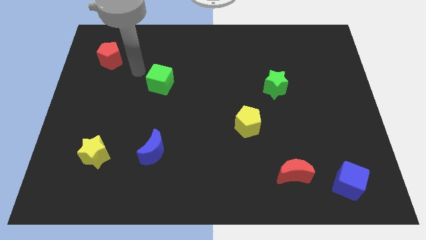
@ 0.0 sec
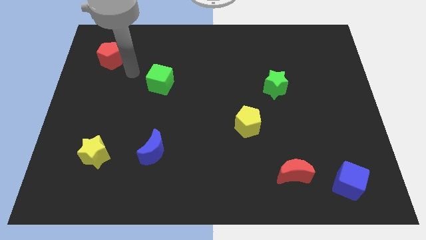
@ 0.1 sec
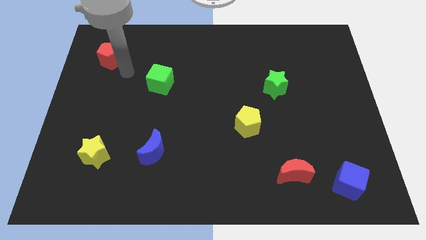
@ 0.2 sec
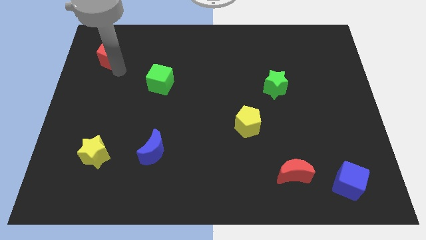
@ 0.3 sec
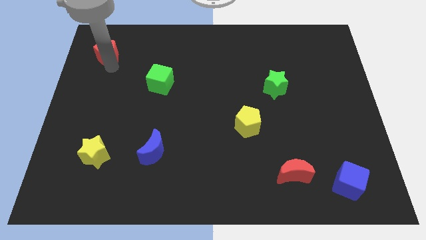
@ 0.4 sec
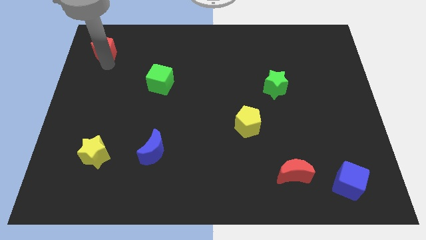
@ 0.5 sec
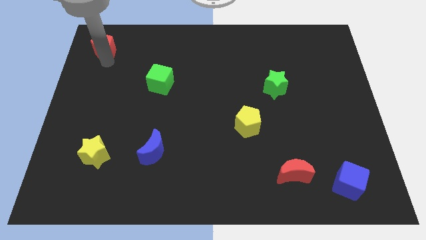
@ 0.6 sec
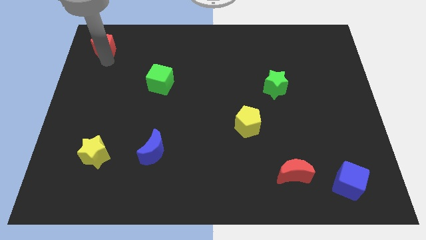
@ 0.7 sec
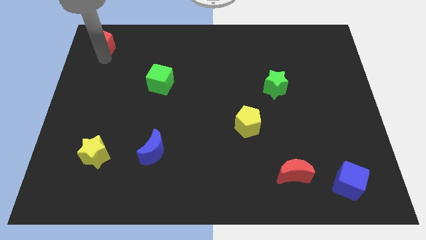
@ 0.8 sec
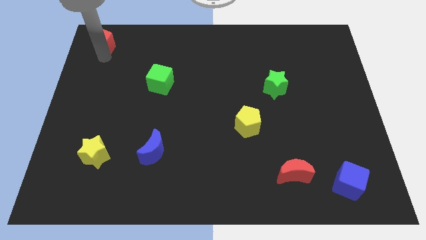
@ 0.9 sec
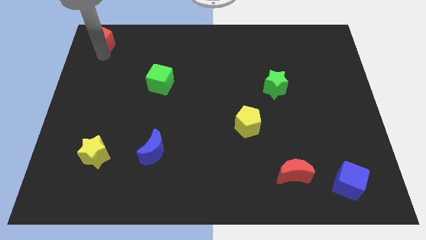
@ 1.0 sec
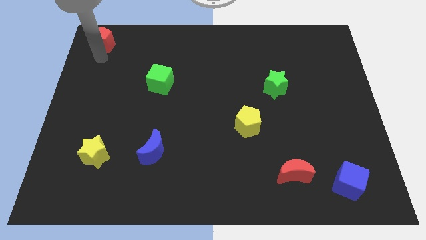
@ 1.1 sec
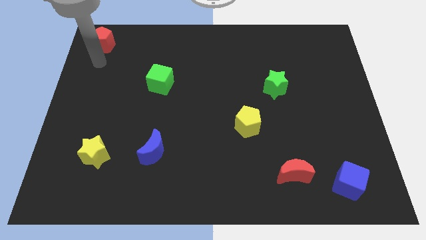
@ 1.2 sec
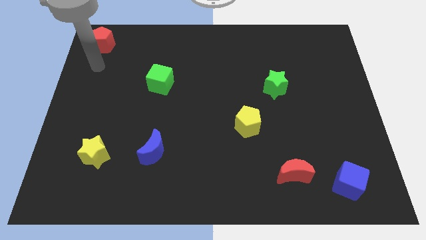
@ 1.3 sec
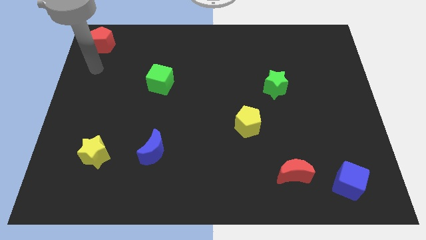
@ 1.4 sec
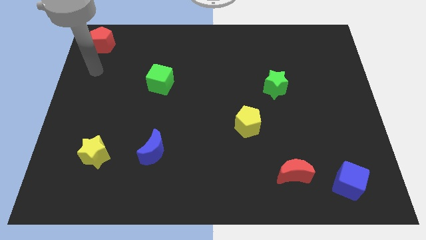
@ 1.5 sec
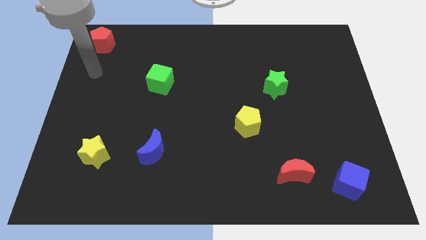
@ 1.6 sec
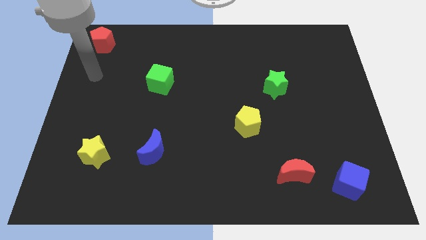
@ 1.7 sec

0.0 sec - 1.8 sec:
move the red pentagon towards top left side corner

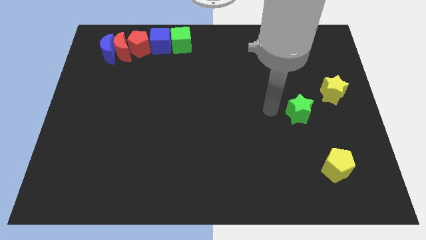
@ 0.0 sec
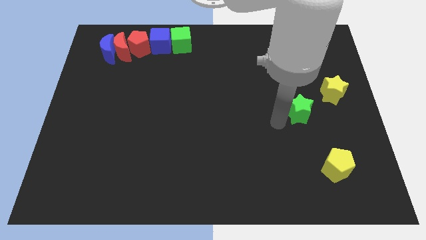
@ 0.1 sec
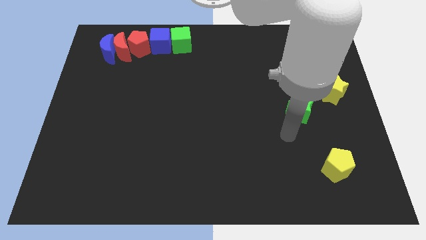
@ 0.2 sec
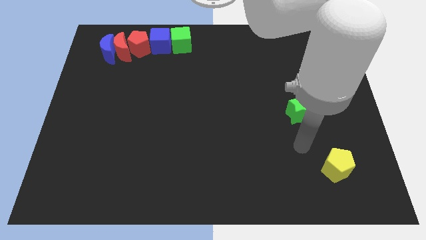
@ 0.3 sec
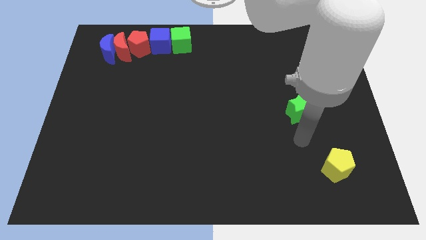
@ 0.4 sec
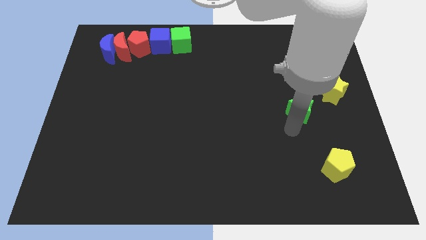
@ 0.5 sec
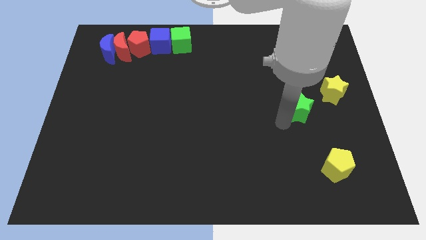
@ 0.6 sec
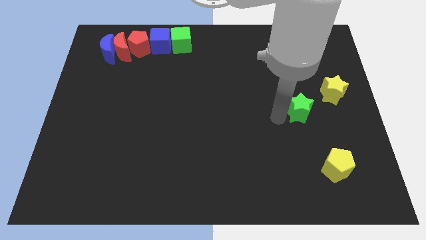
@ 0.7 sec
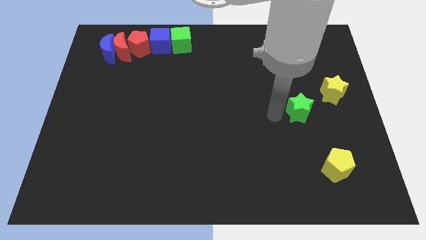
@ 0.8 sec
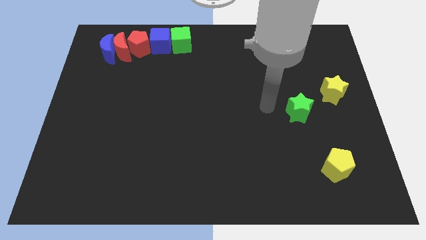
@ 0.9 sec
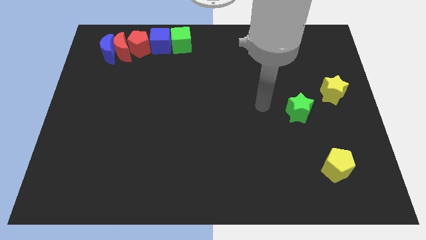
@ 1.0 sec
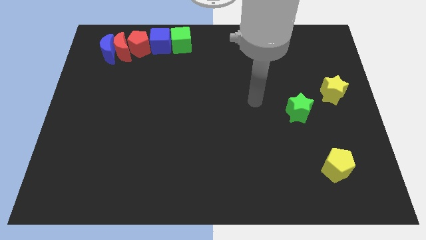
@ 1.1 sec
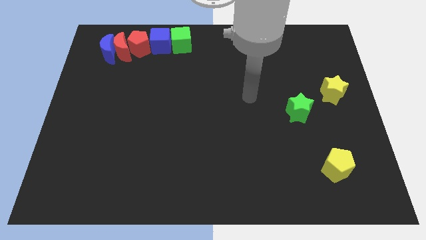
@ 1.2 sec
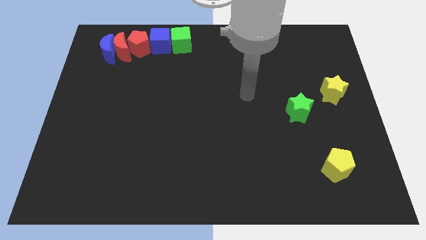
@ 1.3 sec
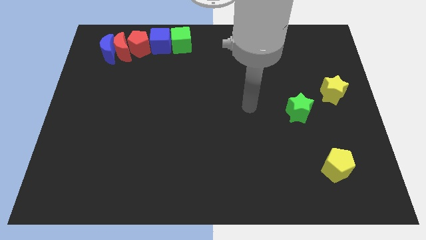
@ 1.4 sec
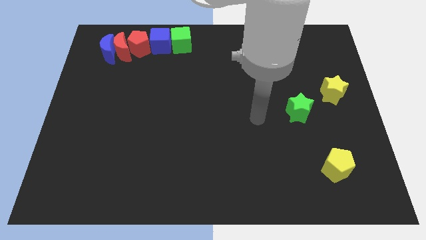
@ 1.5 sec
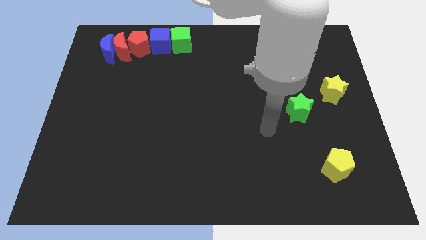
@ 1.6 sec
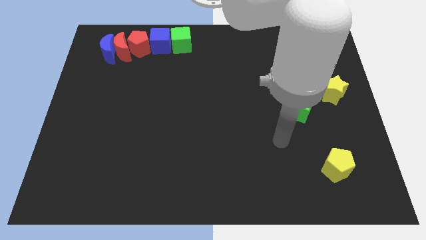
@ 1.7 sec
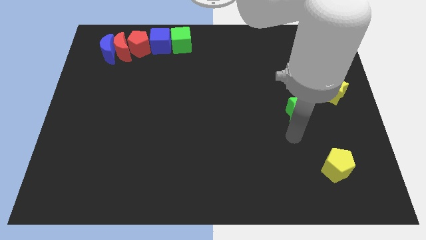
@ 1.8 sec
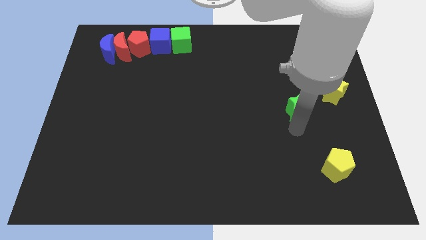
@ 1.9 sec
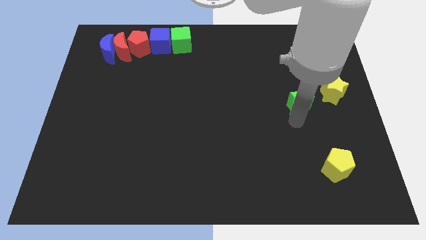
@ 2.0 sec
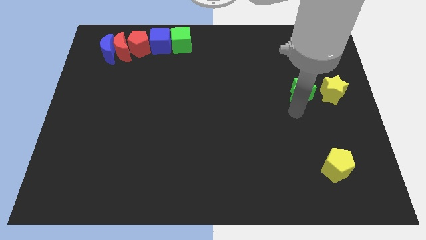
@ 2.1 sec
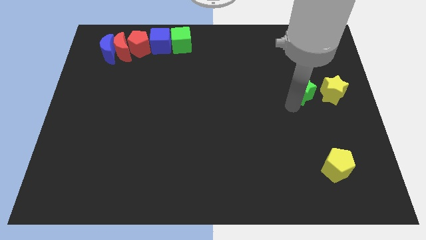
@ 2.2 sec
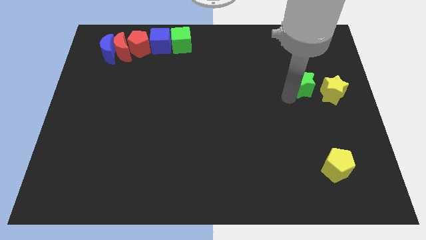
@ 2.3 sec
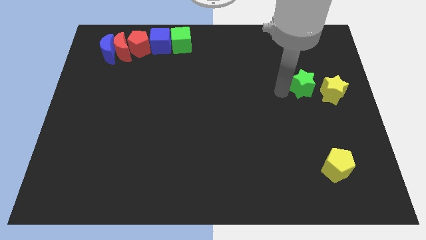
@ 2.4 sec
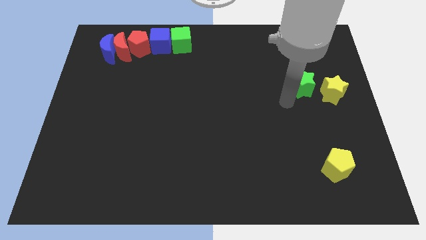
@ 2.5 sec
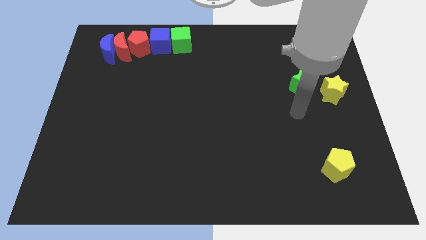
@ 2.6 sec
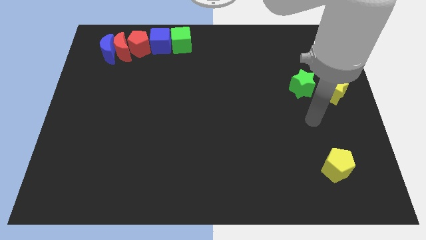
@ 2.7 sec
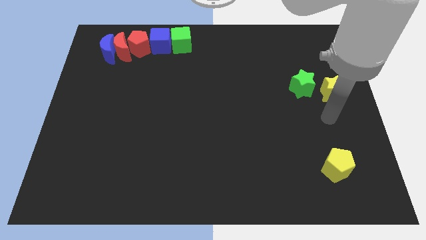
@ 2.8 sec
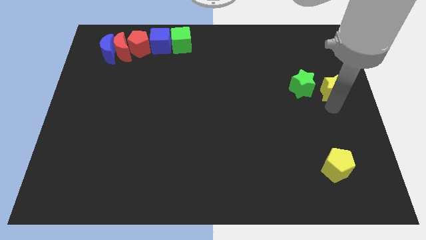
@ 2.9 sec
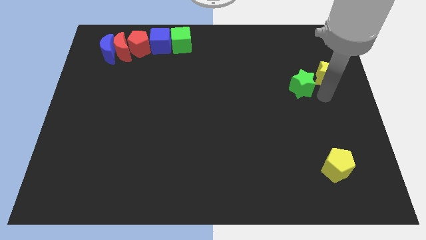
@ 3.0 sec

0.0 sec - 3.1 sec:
slide green star slightly upwards

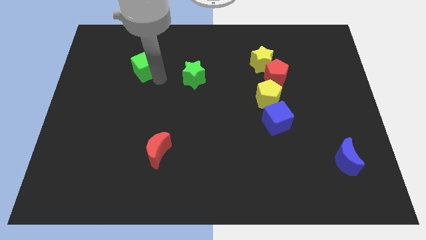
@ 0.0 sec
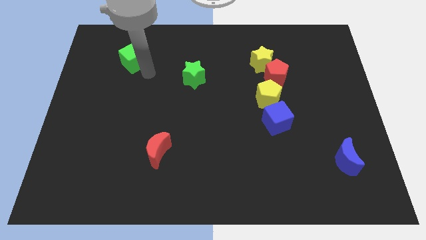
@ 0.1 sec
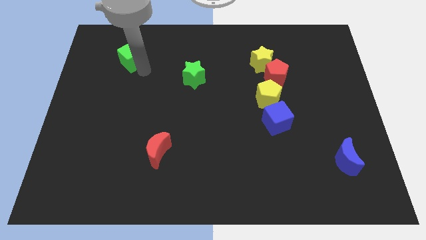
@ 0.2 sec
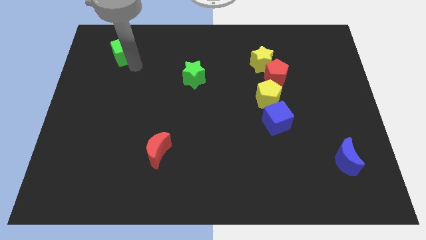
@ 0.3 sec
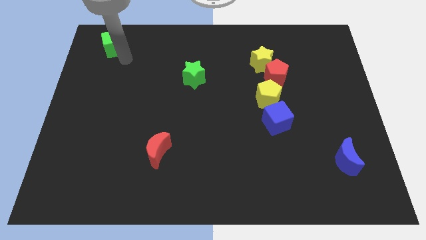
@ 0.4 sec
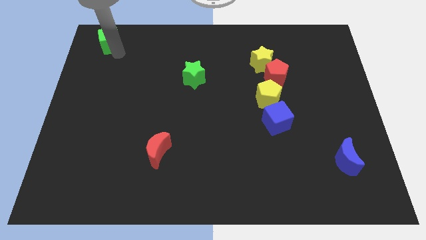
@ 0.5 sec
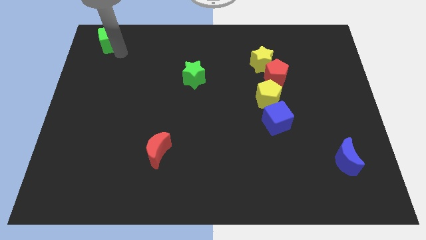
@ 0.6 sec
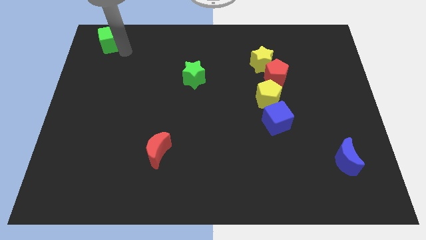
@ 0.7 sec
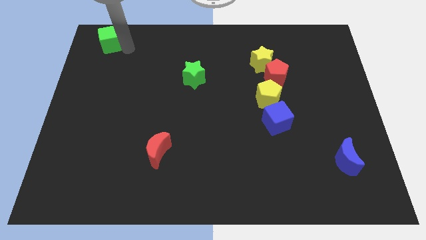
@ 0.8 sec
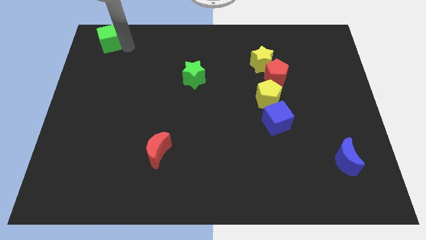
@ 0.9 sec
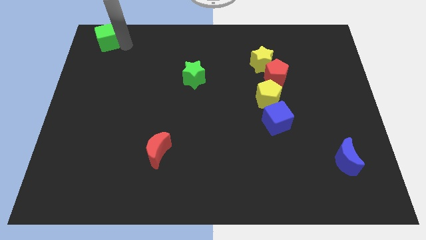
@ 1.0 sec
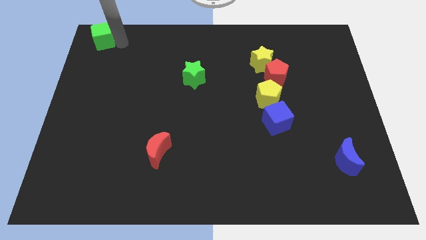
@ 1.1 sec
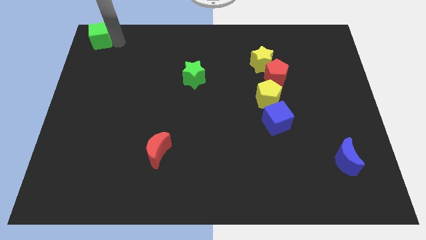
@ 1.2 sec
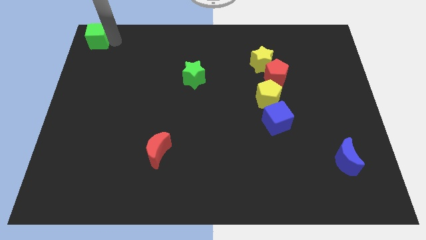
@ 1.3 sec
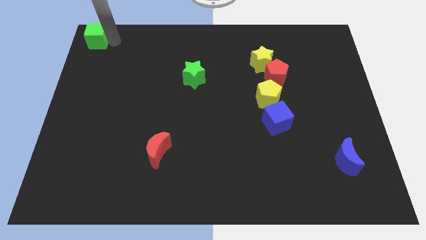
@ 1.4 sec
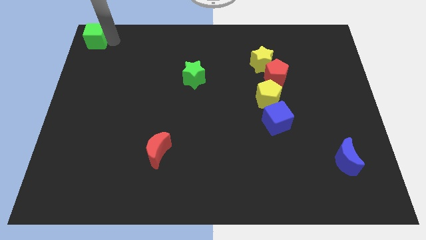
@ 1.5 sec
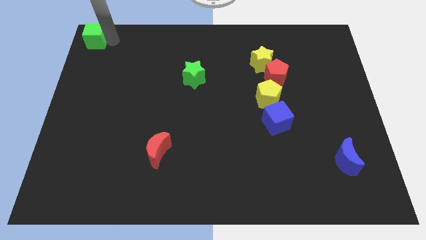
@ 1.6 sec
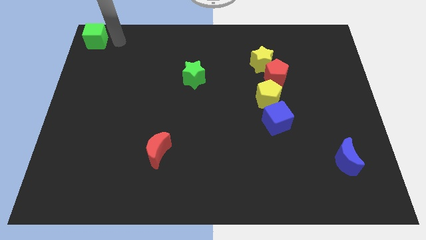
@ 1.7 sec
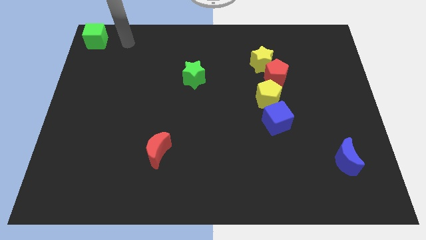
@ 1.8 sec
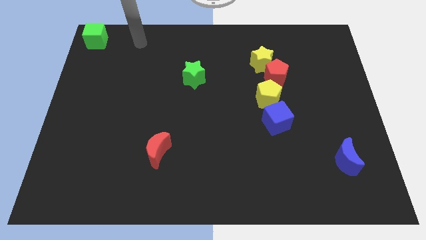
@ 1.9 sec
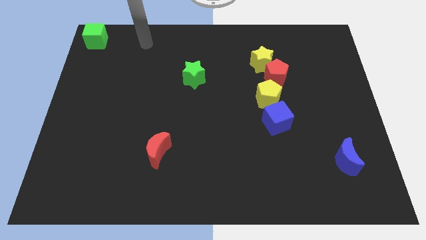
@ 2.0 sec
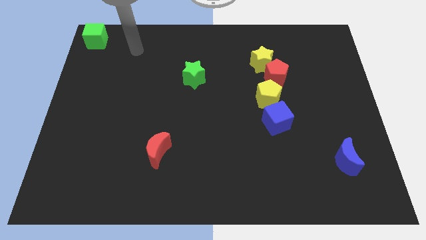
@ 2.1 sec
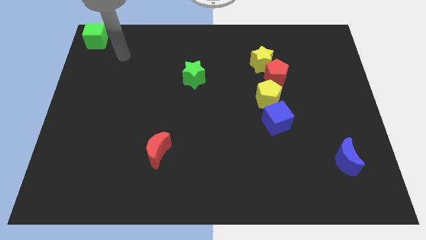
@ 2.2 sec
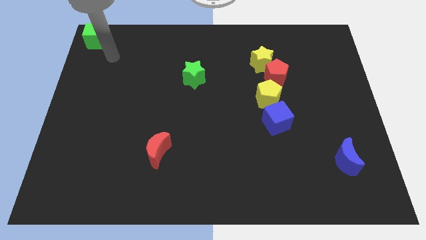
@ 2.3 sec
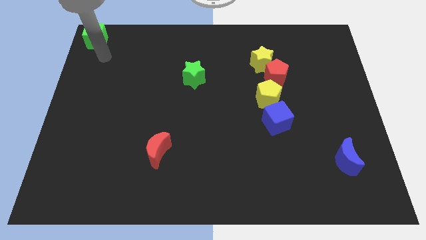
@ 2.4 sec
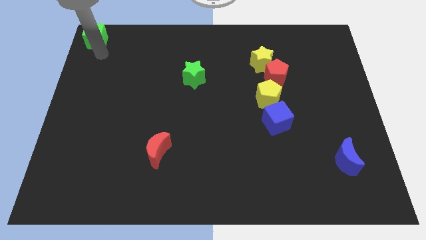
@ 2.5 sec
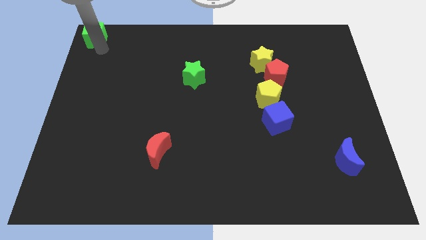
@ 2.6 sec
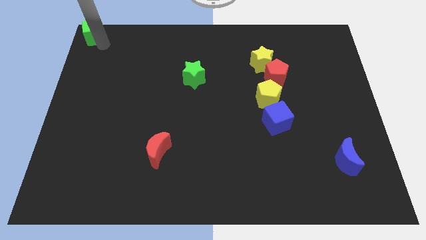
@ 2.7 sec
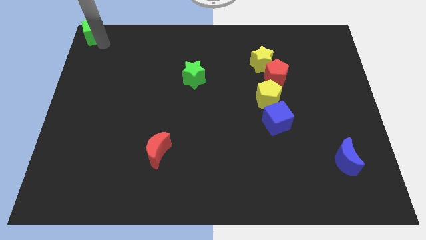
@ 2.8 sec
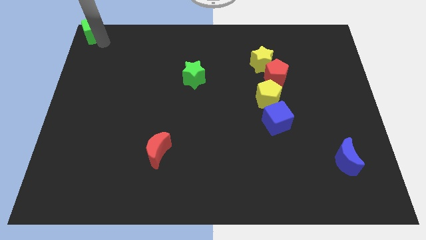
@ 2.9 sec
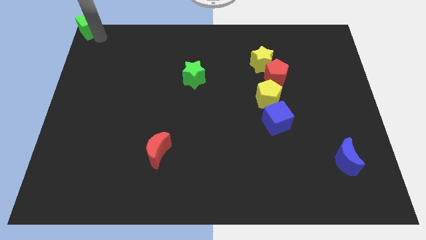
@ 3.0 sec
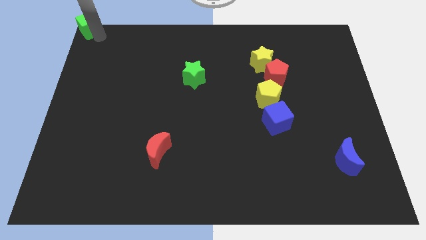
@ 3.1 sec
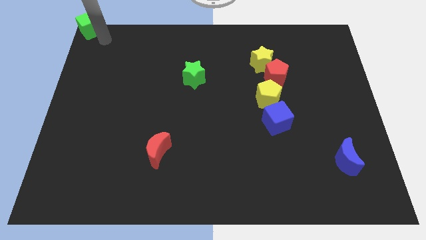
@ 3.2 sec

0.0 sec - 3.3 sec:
push the green cube to the top left of the board

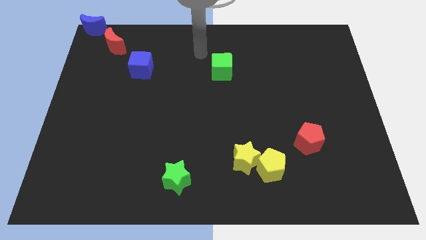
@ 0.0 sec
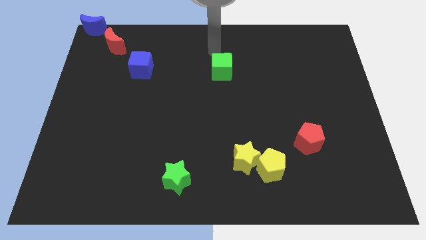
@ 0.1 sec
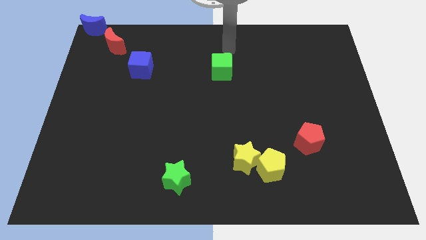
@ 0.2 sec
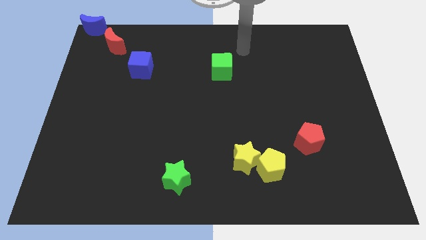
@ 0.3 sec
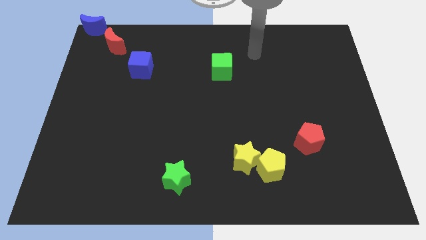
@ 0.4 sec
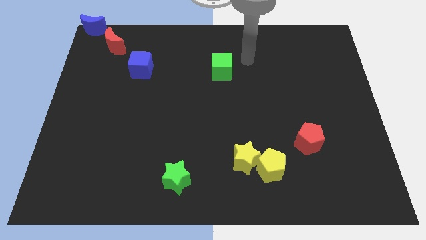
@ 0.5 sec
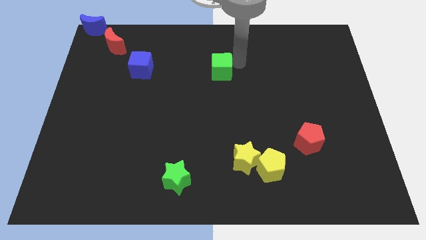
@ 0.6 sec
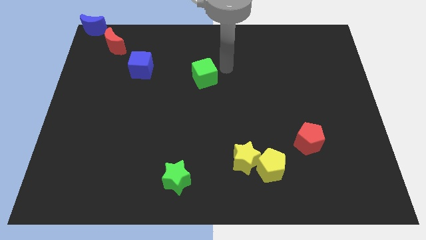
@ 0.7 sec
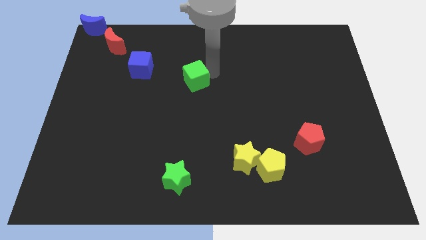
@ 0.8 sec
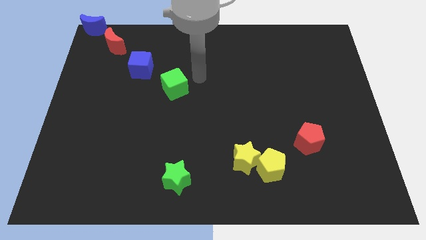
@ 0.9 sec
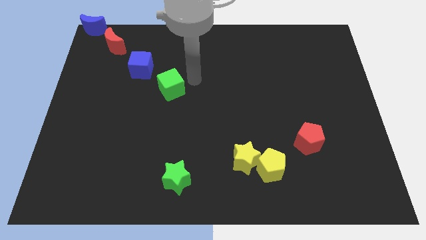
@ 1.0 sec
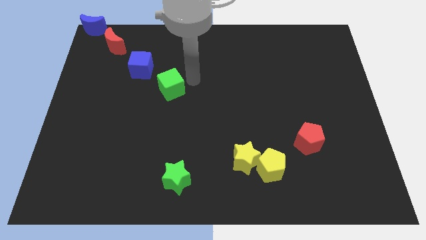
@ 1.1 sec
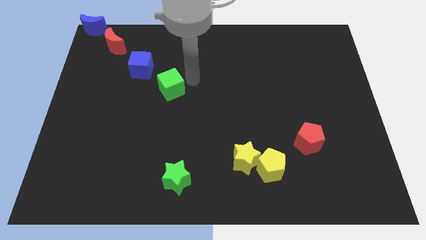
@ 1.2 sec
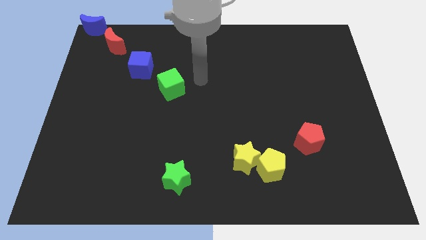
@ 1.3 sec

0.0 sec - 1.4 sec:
push the green cube to the left side of the board
